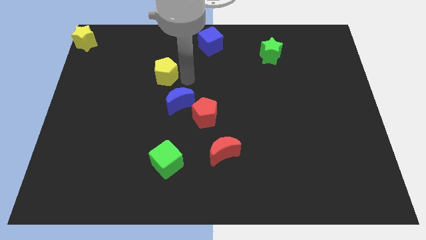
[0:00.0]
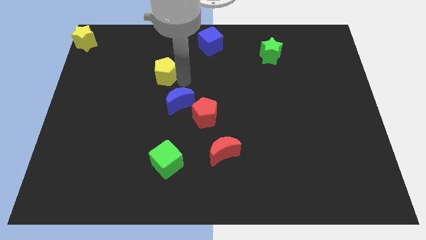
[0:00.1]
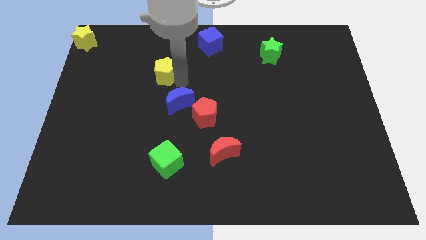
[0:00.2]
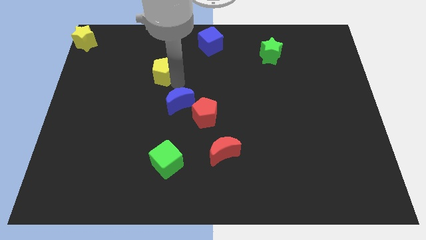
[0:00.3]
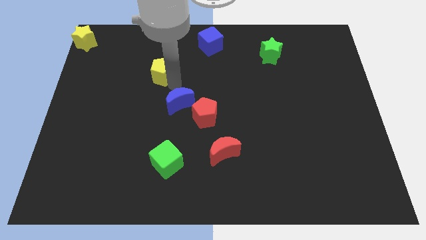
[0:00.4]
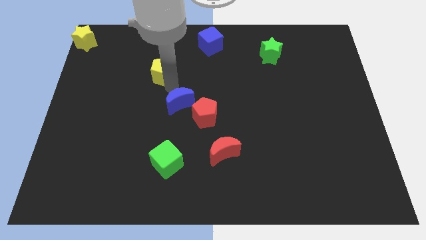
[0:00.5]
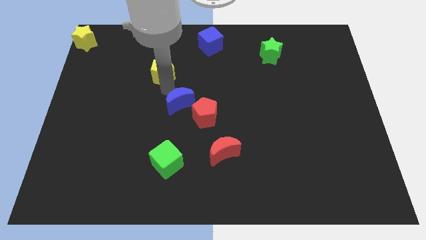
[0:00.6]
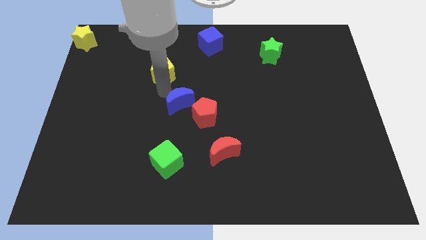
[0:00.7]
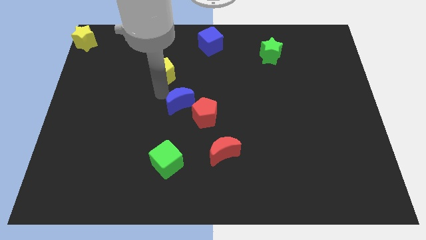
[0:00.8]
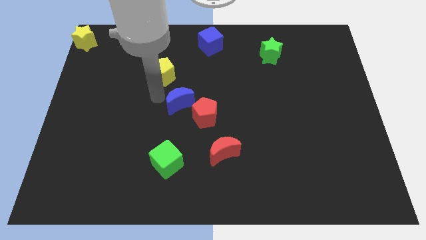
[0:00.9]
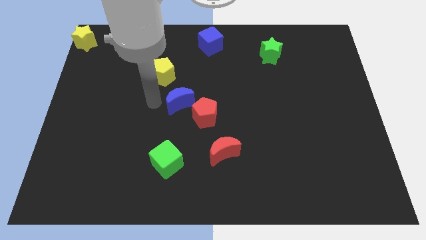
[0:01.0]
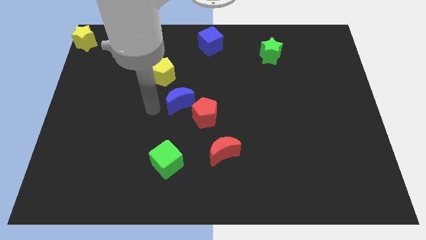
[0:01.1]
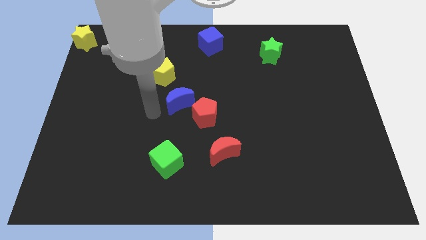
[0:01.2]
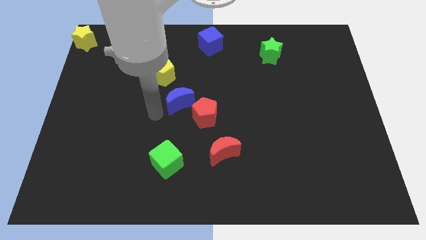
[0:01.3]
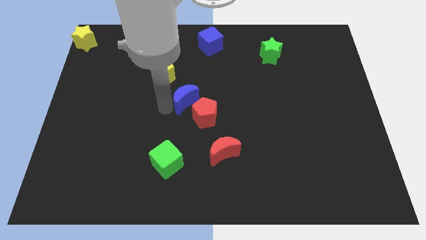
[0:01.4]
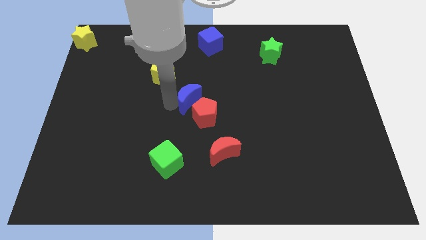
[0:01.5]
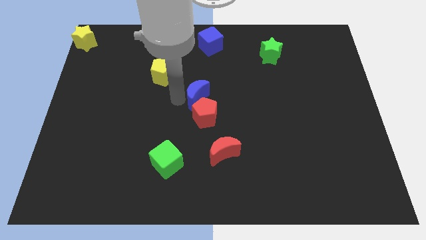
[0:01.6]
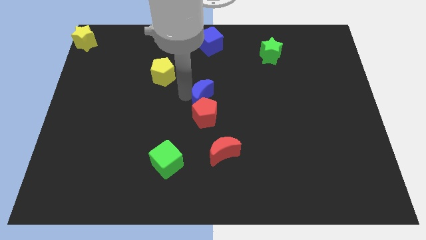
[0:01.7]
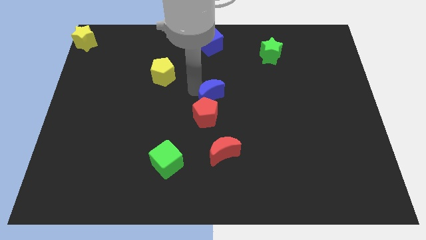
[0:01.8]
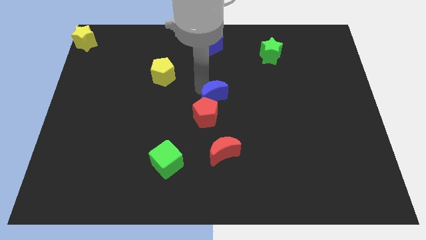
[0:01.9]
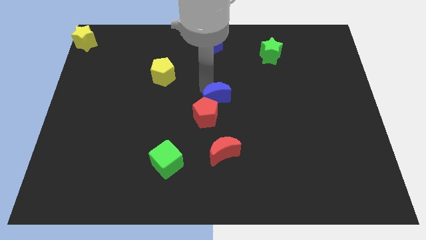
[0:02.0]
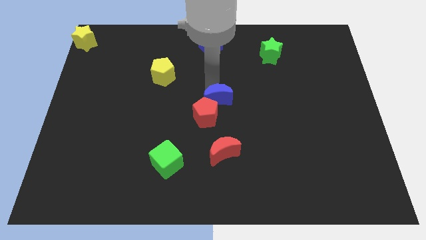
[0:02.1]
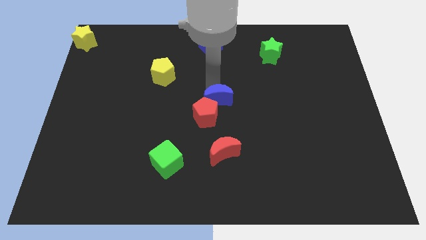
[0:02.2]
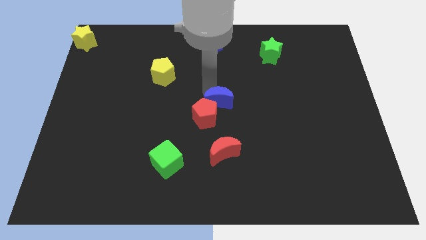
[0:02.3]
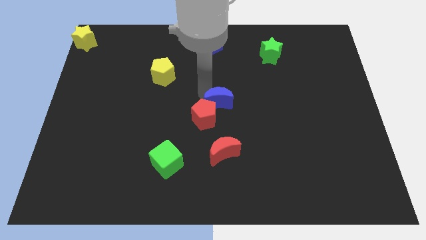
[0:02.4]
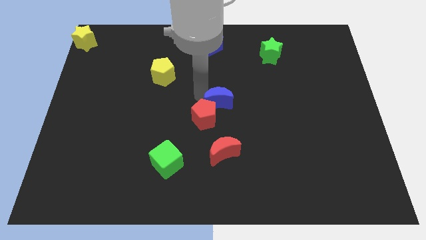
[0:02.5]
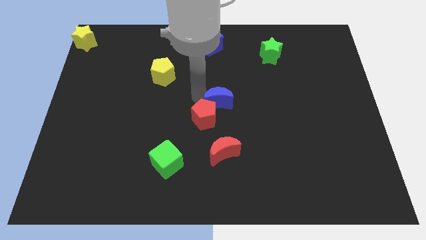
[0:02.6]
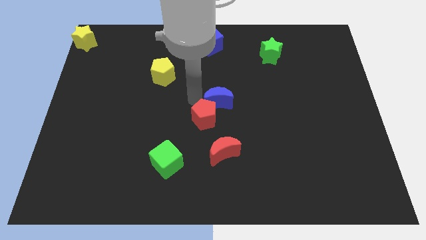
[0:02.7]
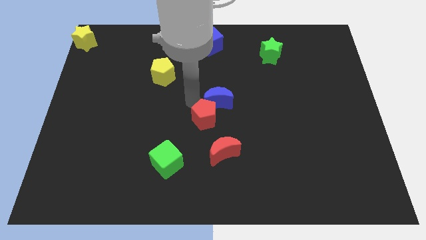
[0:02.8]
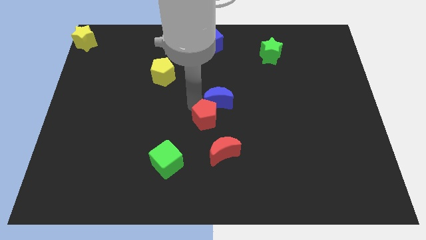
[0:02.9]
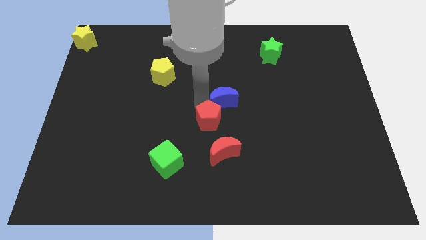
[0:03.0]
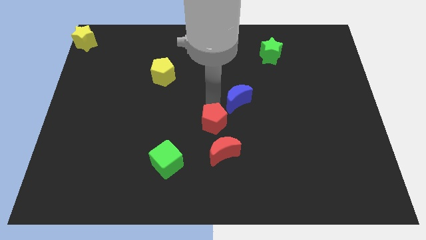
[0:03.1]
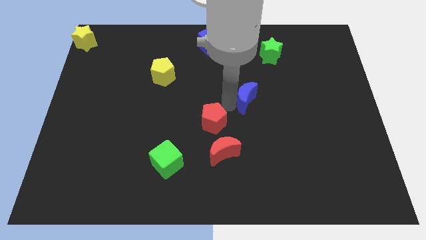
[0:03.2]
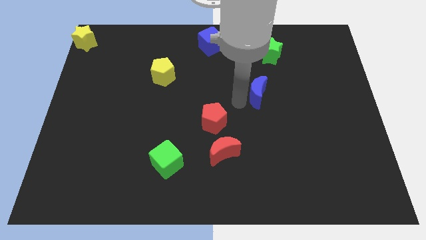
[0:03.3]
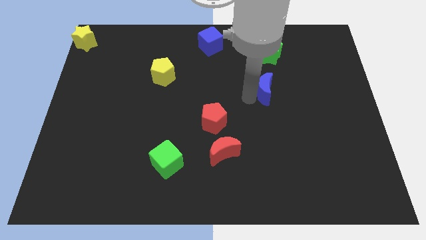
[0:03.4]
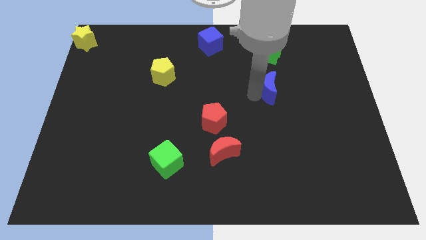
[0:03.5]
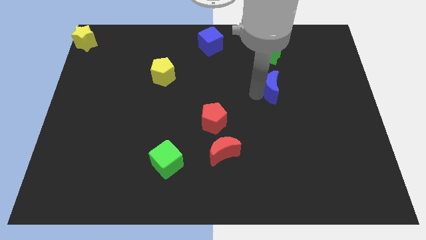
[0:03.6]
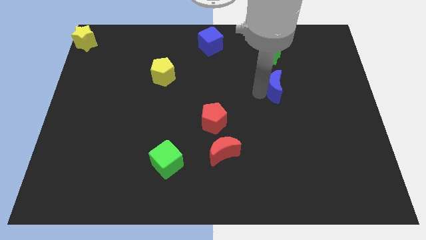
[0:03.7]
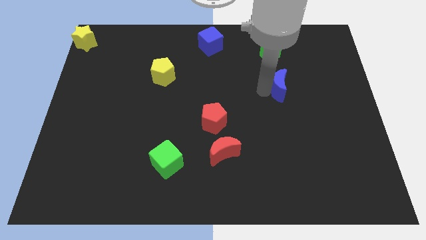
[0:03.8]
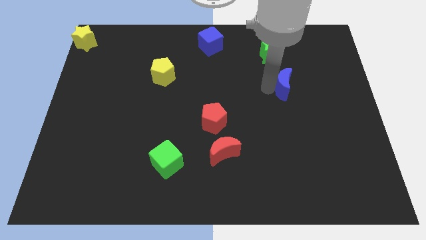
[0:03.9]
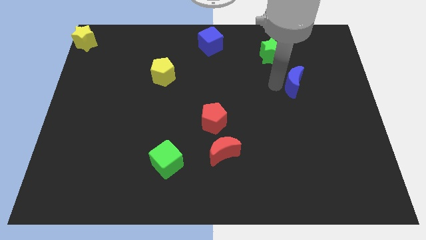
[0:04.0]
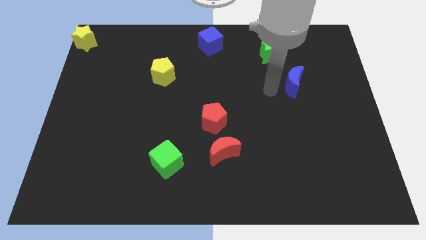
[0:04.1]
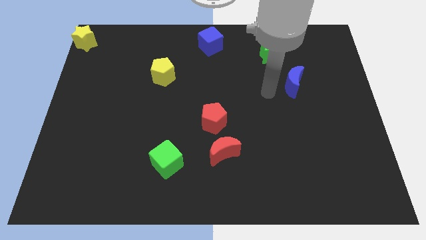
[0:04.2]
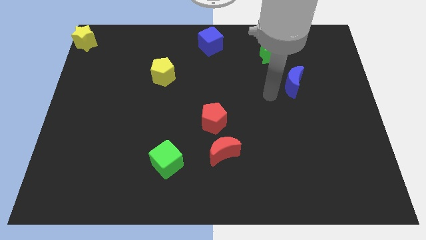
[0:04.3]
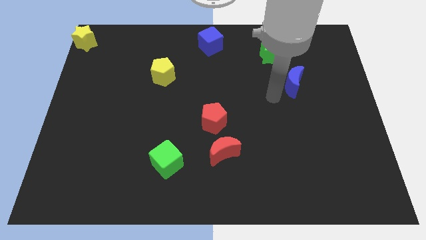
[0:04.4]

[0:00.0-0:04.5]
push the blue crescent to the bottom right side of the green star

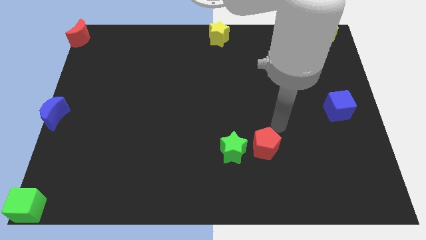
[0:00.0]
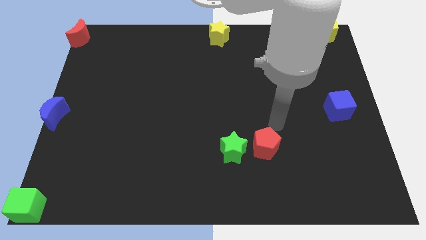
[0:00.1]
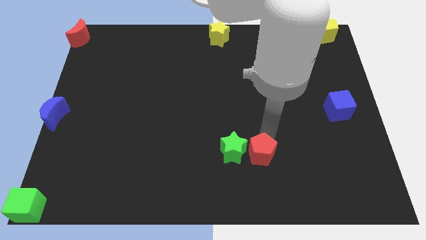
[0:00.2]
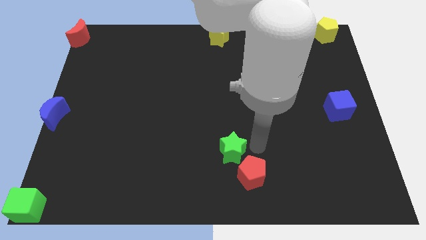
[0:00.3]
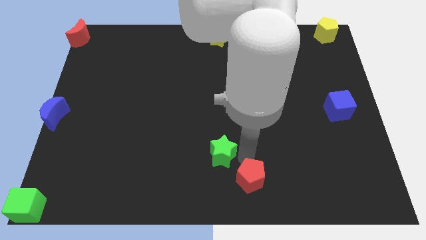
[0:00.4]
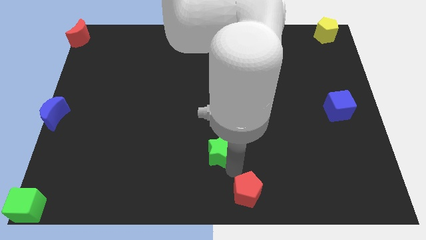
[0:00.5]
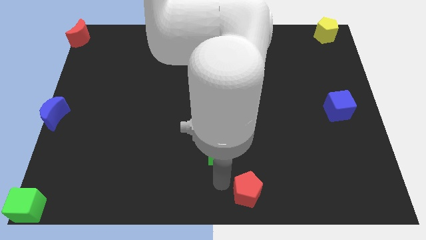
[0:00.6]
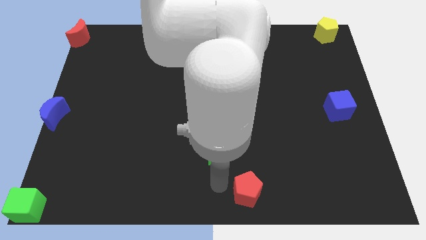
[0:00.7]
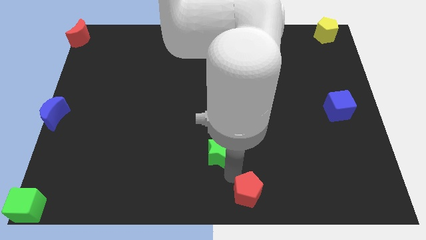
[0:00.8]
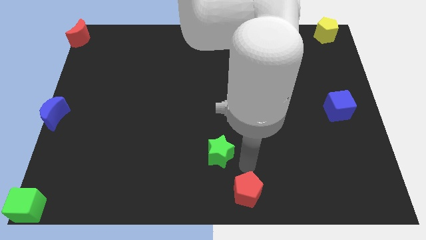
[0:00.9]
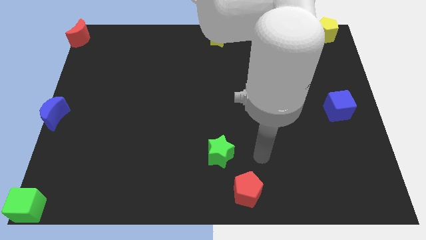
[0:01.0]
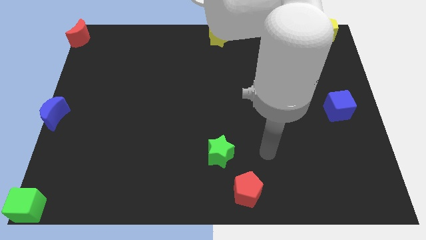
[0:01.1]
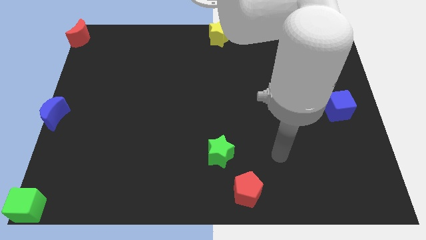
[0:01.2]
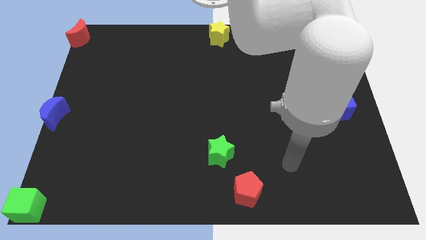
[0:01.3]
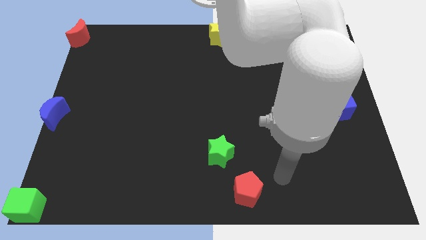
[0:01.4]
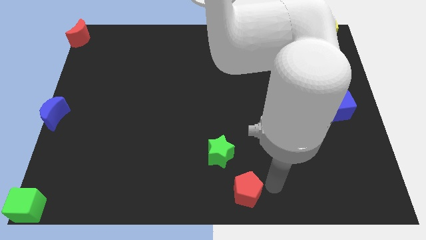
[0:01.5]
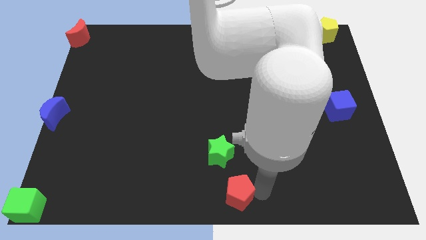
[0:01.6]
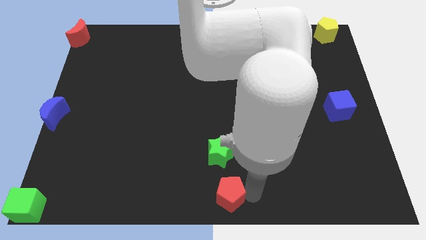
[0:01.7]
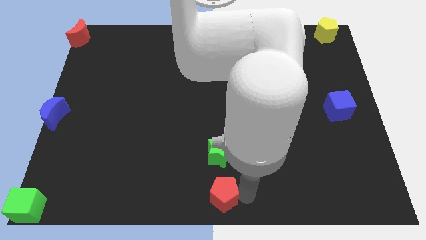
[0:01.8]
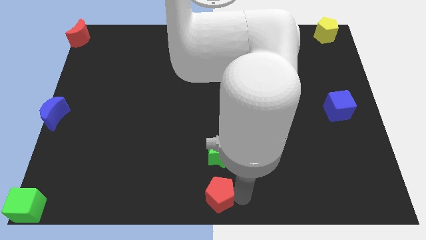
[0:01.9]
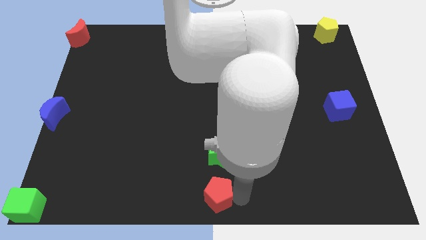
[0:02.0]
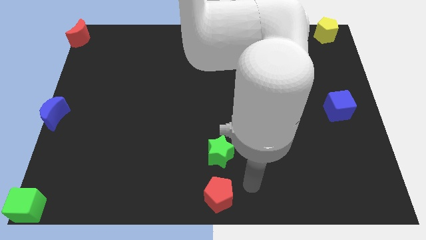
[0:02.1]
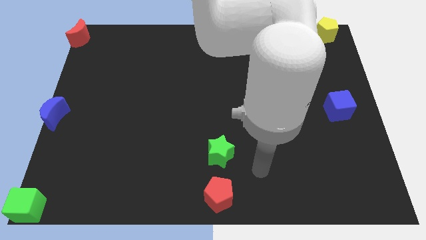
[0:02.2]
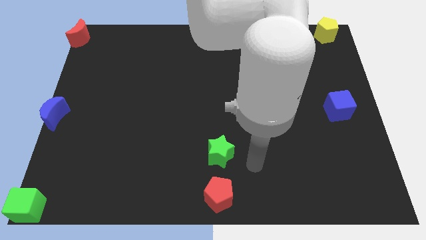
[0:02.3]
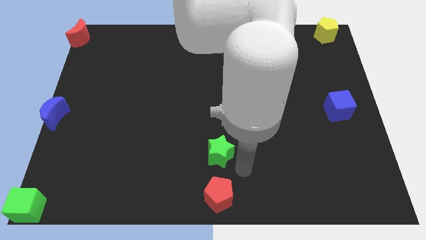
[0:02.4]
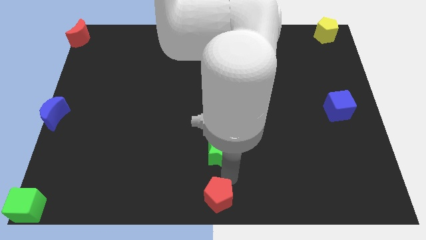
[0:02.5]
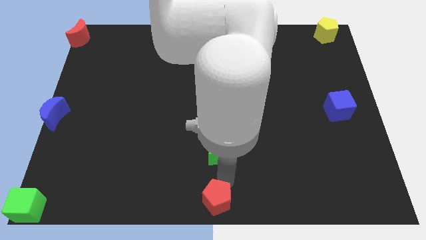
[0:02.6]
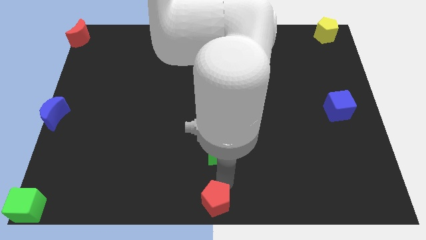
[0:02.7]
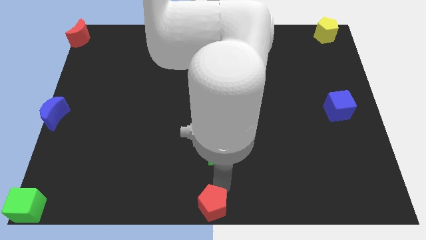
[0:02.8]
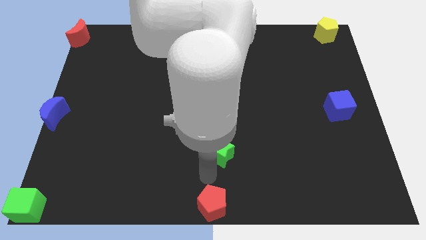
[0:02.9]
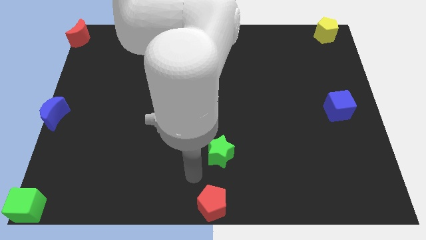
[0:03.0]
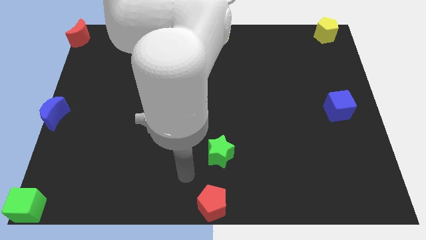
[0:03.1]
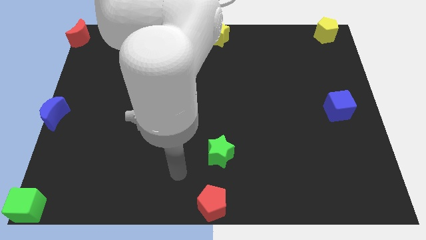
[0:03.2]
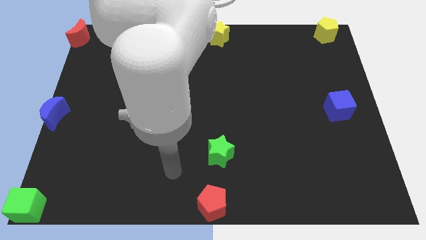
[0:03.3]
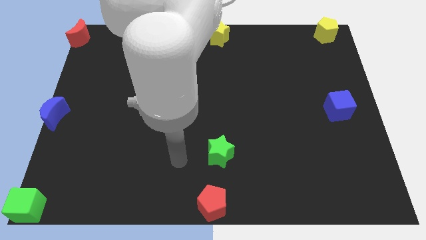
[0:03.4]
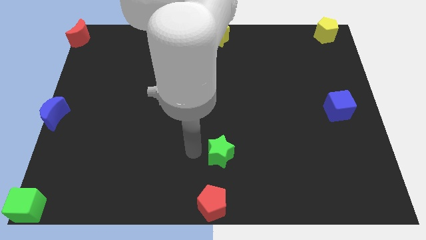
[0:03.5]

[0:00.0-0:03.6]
separate the green star and red pentagon

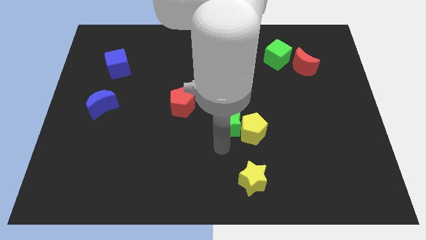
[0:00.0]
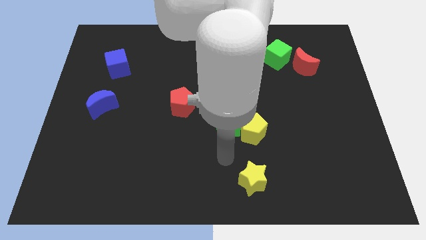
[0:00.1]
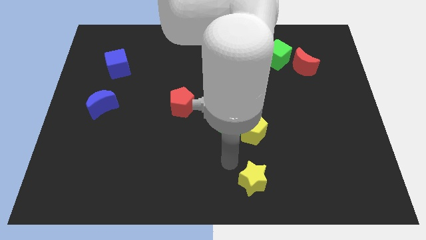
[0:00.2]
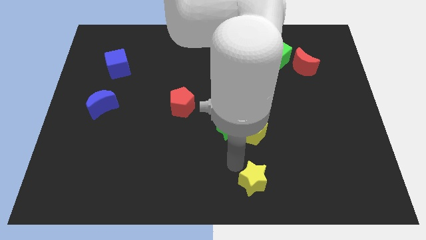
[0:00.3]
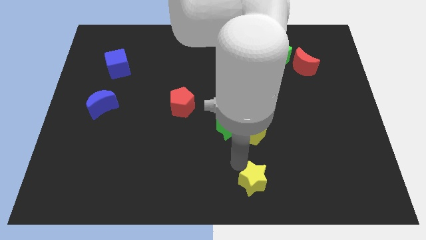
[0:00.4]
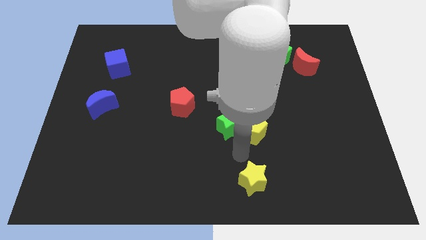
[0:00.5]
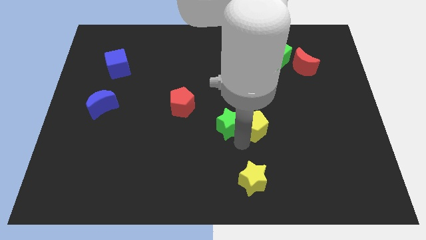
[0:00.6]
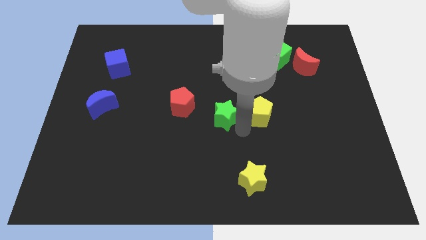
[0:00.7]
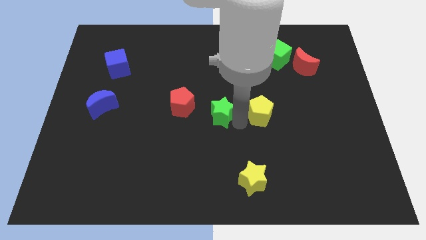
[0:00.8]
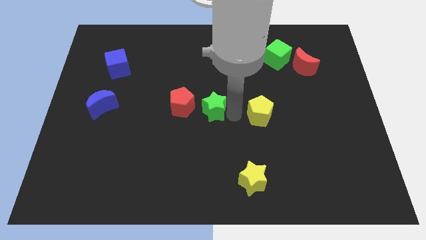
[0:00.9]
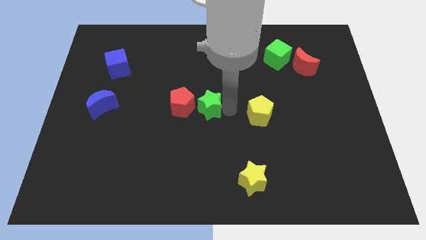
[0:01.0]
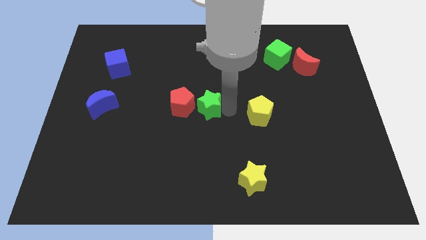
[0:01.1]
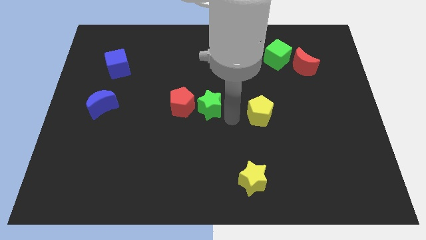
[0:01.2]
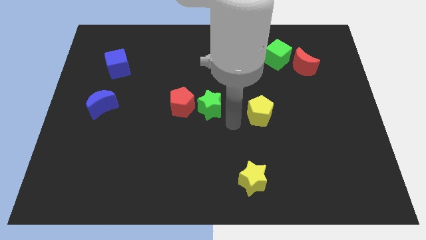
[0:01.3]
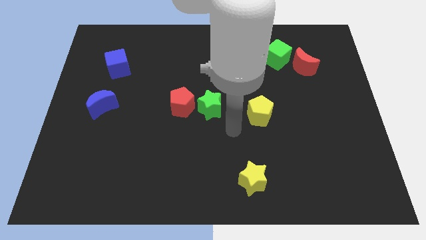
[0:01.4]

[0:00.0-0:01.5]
separate the green star and yellow pentagon
